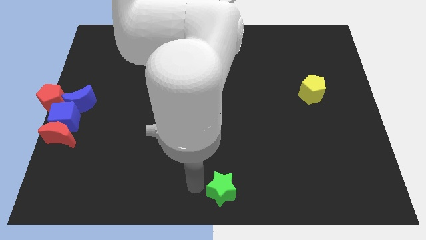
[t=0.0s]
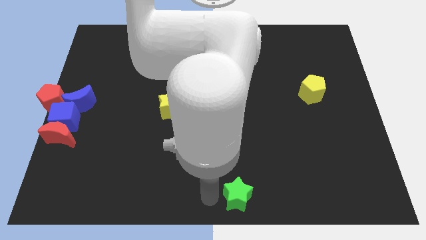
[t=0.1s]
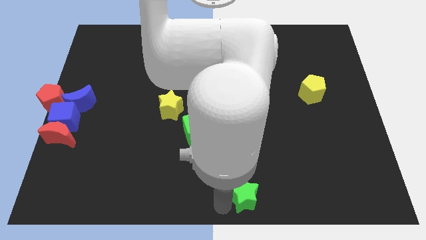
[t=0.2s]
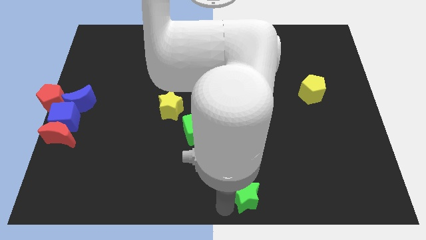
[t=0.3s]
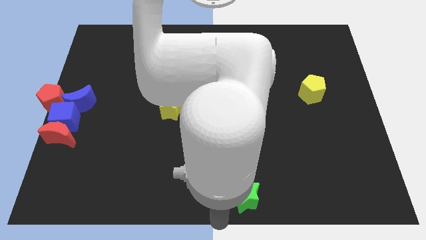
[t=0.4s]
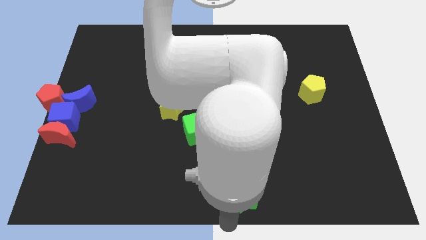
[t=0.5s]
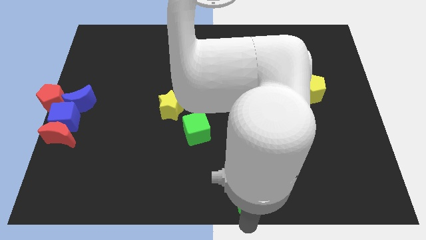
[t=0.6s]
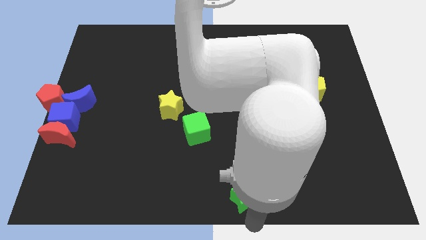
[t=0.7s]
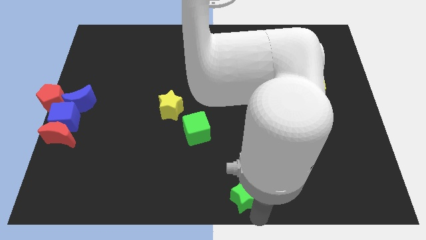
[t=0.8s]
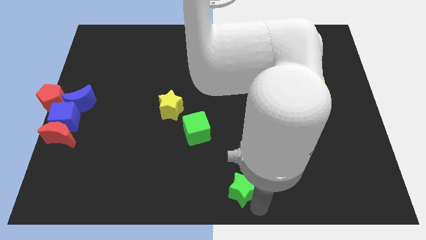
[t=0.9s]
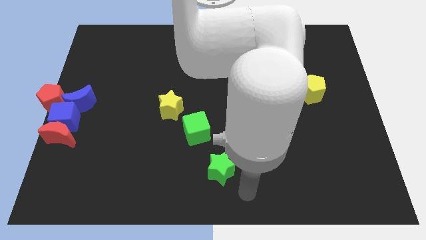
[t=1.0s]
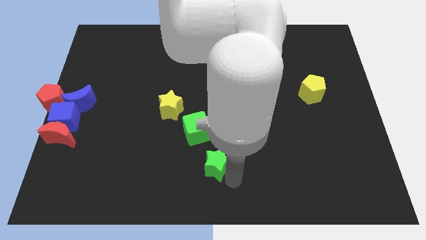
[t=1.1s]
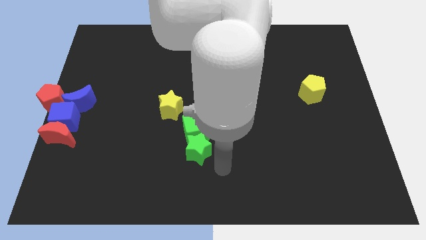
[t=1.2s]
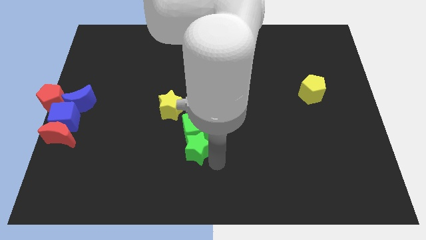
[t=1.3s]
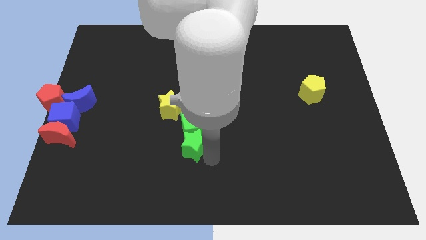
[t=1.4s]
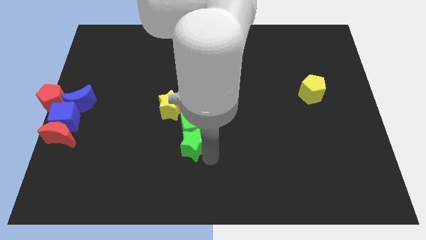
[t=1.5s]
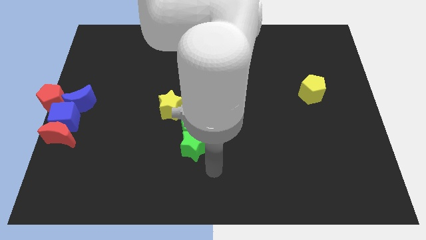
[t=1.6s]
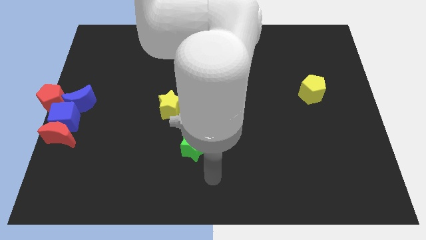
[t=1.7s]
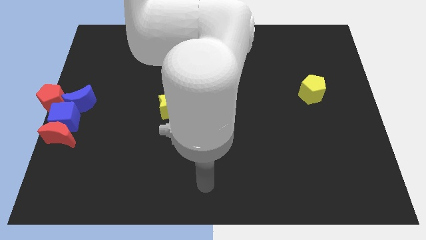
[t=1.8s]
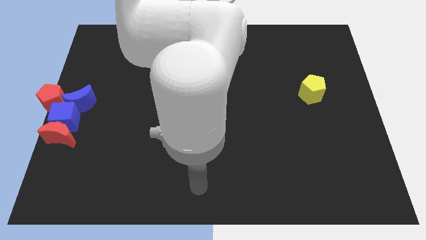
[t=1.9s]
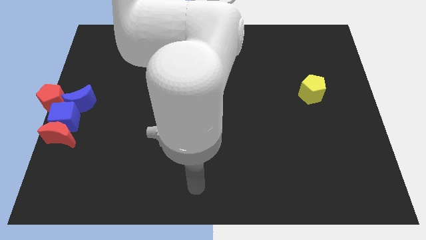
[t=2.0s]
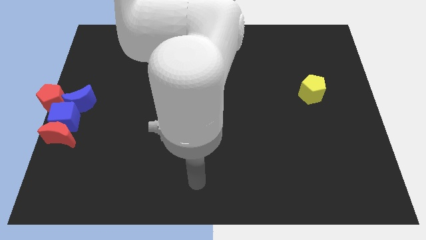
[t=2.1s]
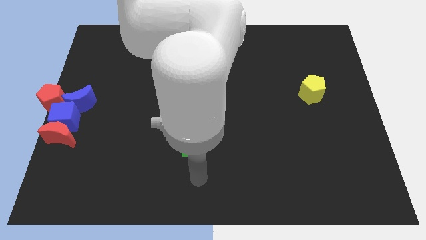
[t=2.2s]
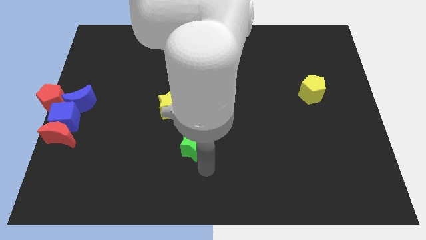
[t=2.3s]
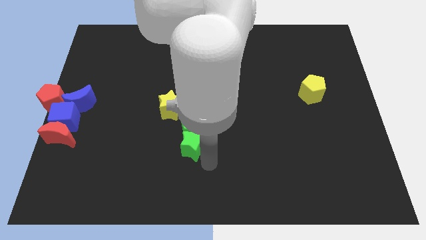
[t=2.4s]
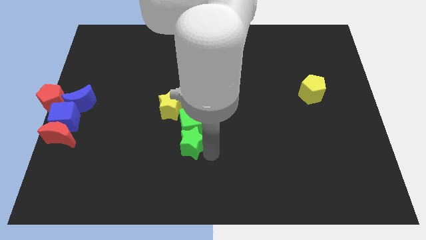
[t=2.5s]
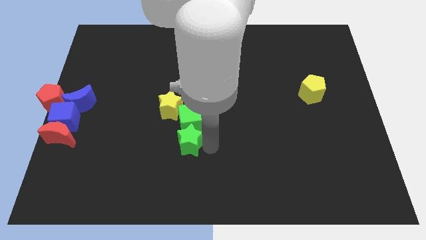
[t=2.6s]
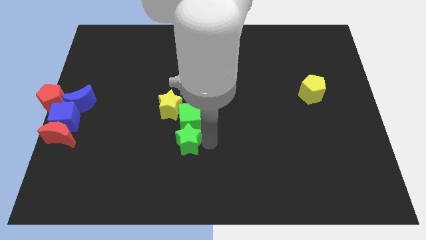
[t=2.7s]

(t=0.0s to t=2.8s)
push the green star into the green cube

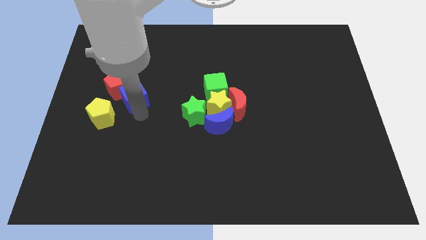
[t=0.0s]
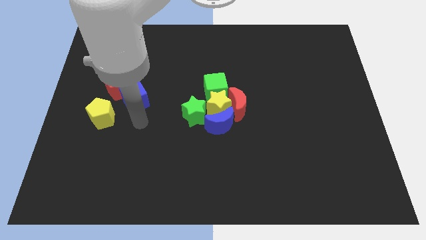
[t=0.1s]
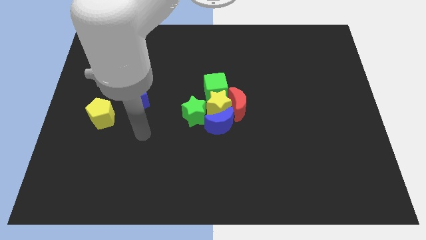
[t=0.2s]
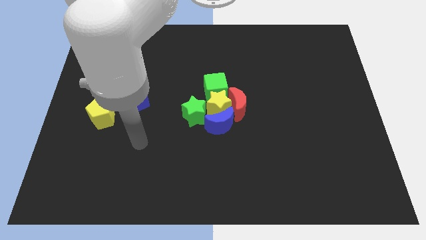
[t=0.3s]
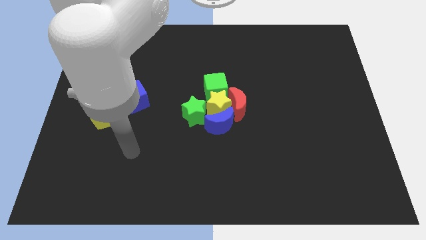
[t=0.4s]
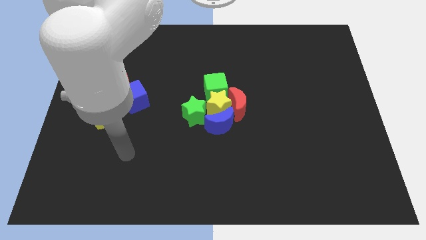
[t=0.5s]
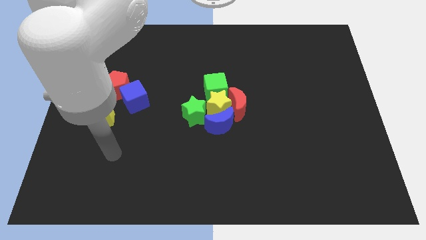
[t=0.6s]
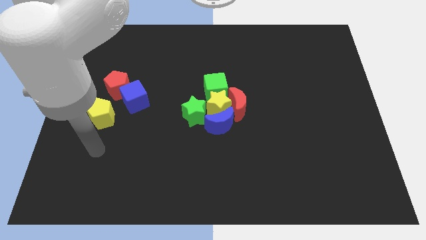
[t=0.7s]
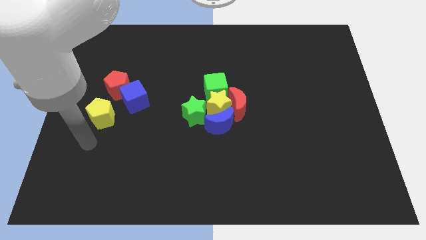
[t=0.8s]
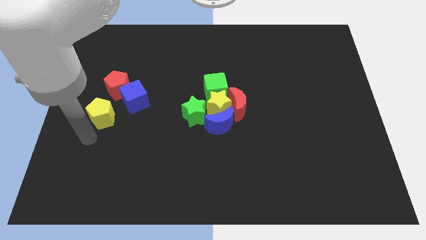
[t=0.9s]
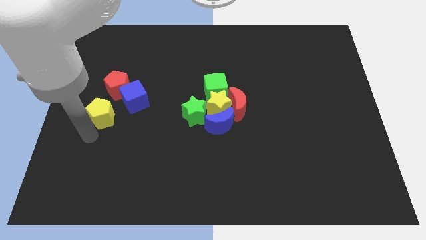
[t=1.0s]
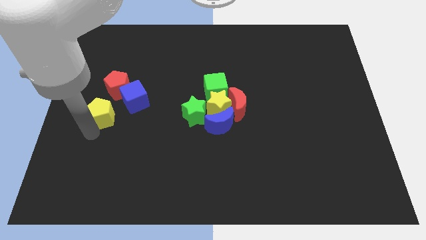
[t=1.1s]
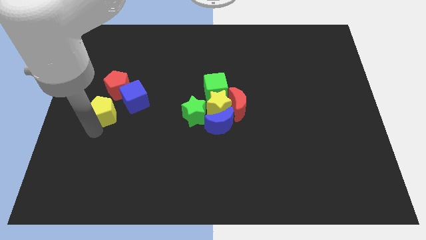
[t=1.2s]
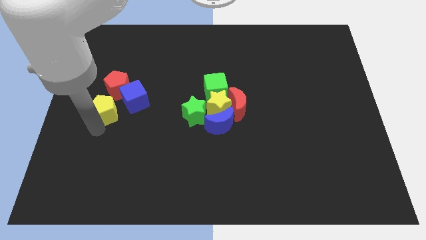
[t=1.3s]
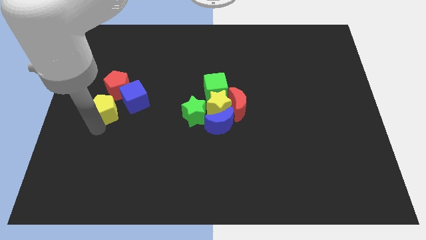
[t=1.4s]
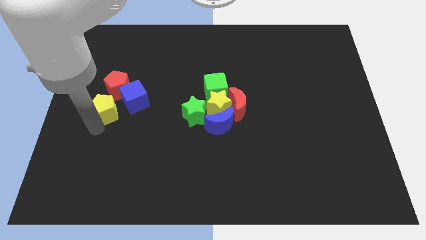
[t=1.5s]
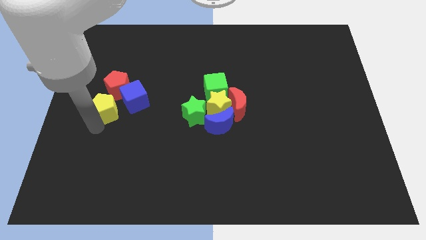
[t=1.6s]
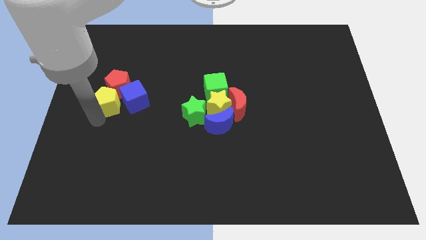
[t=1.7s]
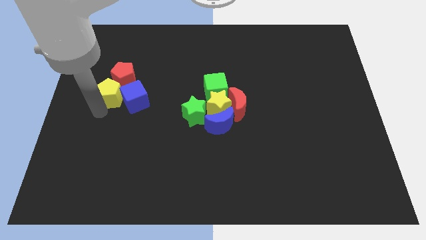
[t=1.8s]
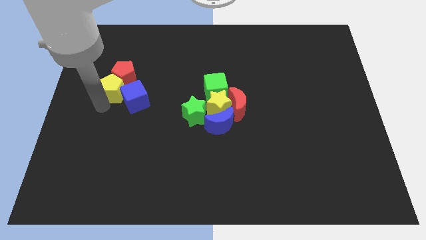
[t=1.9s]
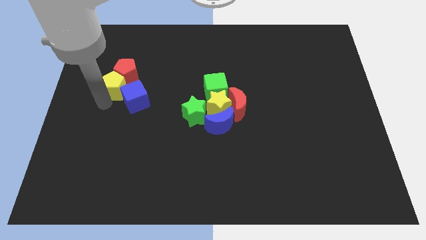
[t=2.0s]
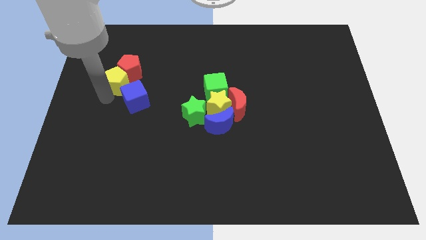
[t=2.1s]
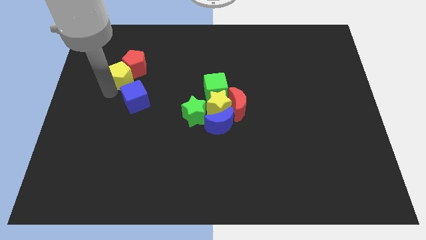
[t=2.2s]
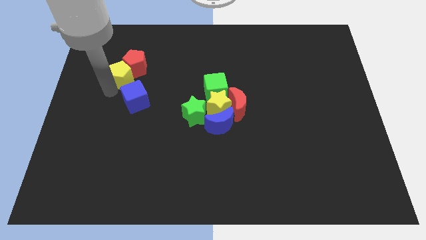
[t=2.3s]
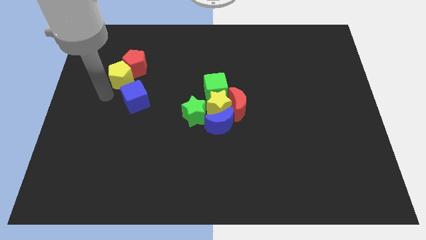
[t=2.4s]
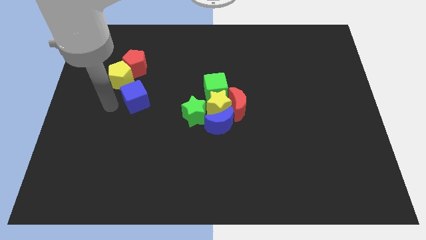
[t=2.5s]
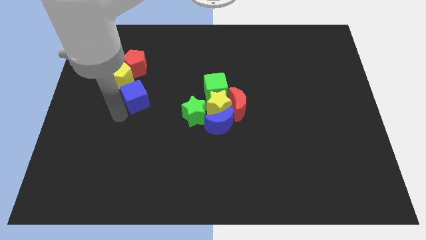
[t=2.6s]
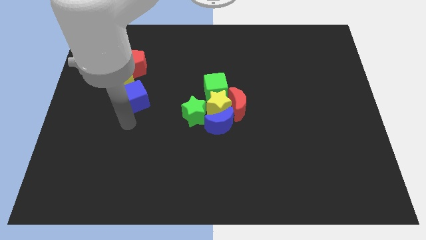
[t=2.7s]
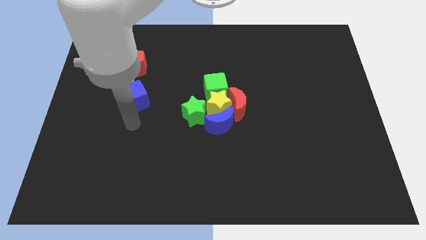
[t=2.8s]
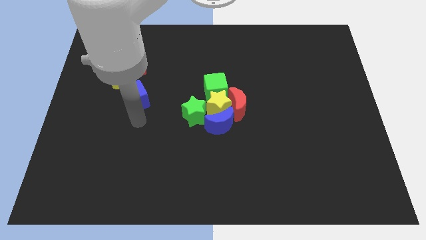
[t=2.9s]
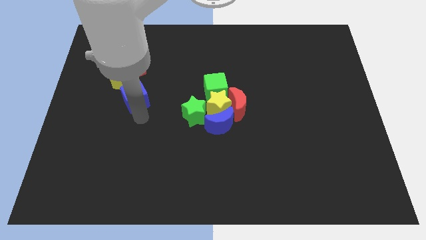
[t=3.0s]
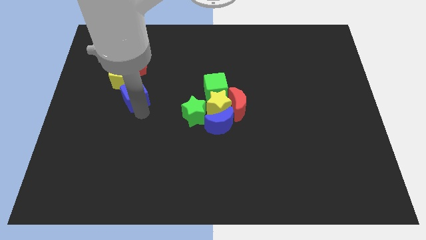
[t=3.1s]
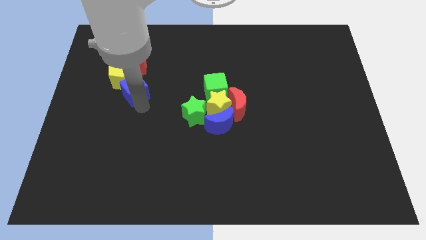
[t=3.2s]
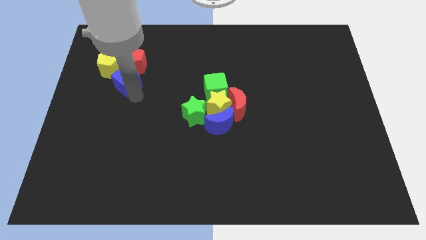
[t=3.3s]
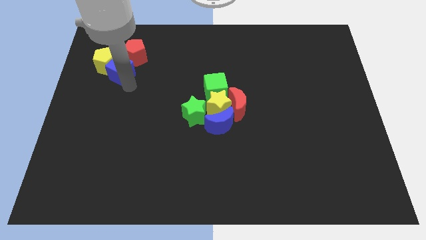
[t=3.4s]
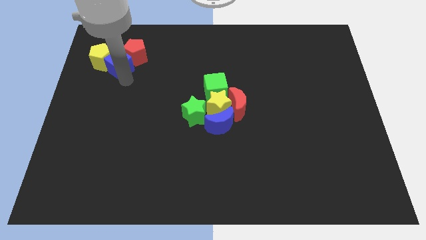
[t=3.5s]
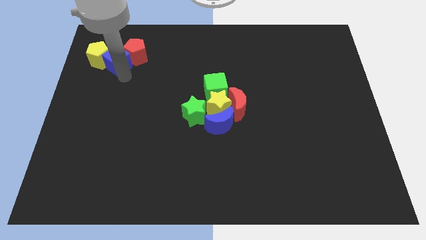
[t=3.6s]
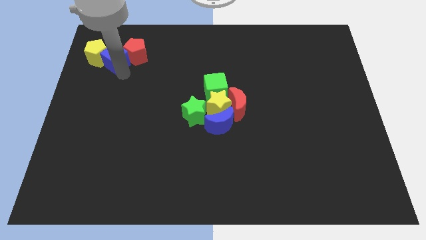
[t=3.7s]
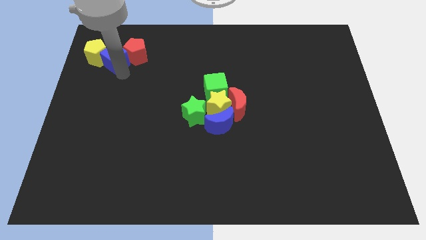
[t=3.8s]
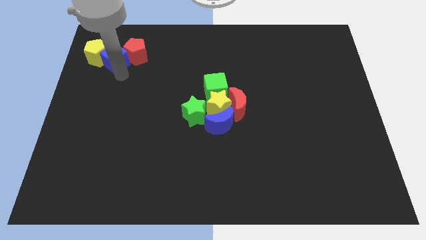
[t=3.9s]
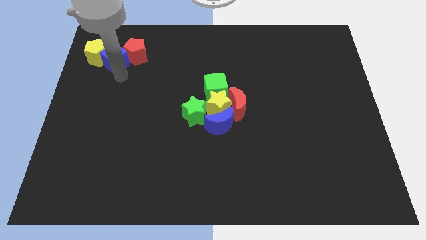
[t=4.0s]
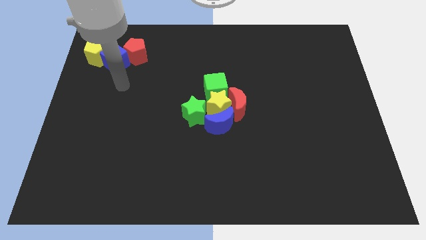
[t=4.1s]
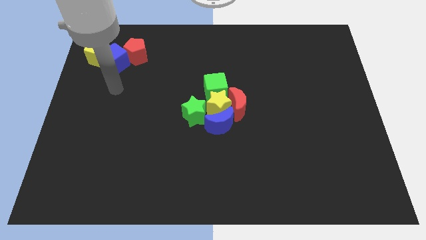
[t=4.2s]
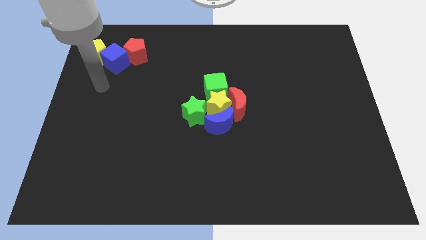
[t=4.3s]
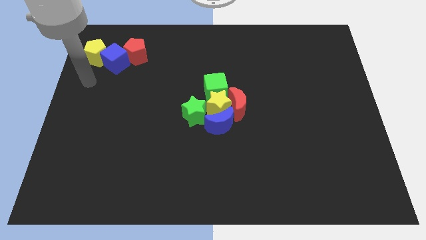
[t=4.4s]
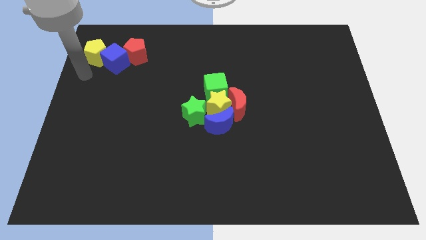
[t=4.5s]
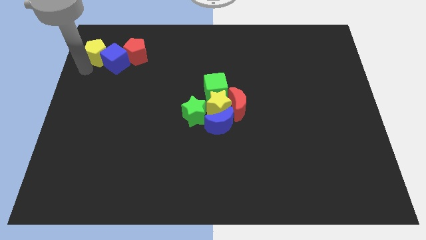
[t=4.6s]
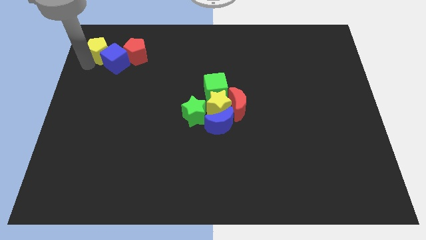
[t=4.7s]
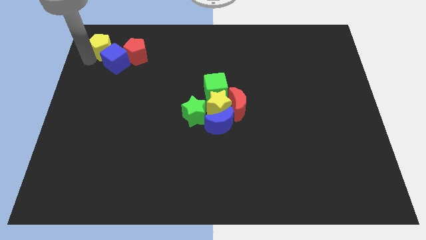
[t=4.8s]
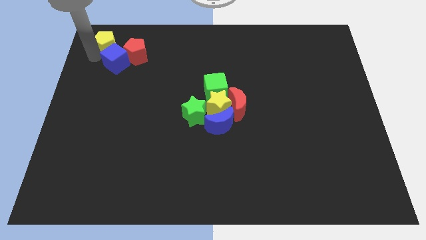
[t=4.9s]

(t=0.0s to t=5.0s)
push the yellow pentagon slightly upwards

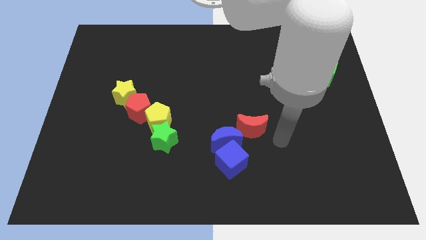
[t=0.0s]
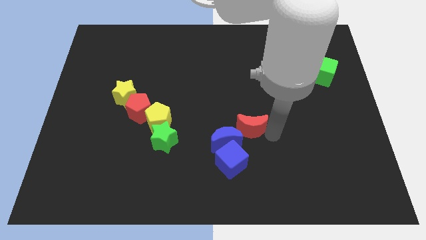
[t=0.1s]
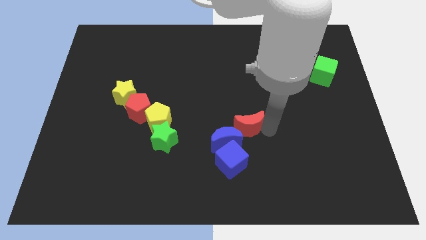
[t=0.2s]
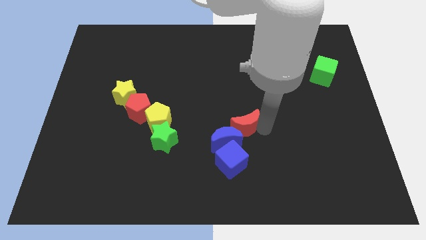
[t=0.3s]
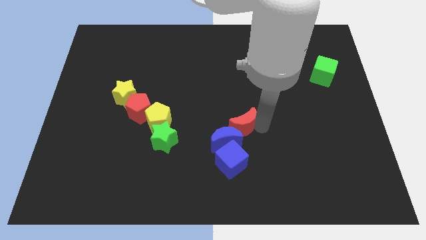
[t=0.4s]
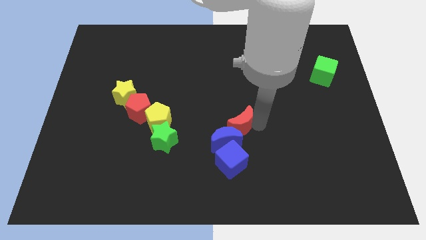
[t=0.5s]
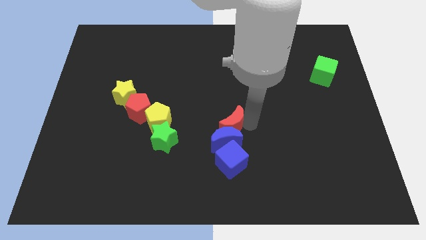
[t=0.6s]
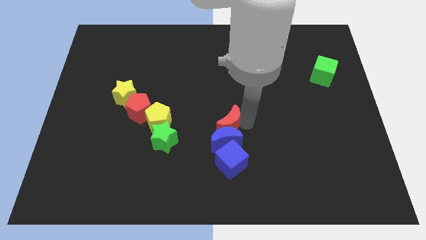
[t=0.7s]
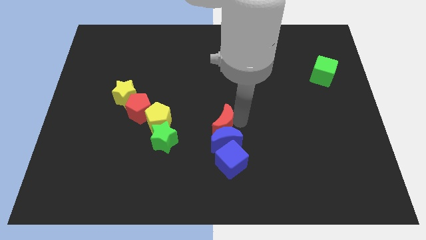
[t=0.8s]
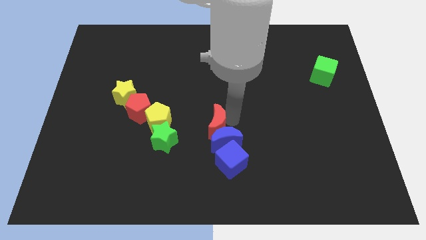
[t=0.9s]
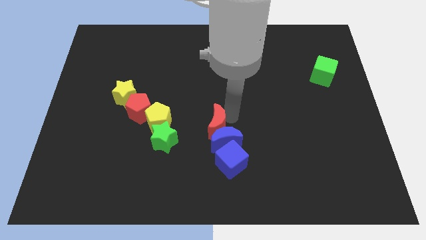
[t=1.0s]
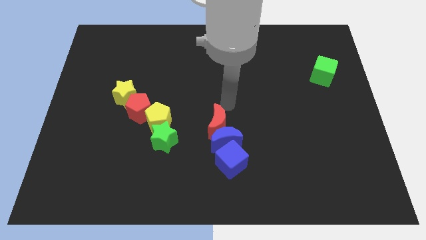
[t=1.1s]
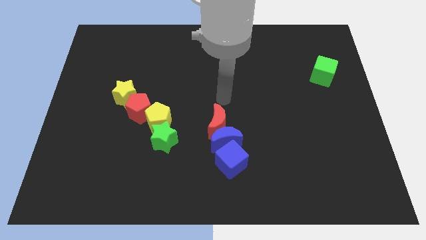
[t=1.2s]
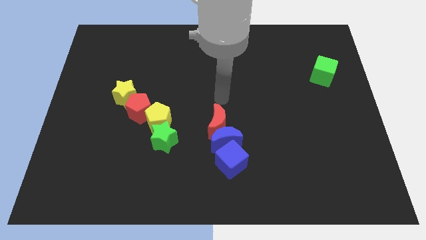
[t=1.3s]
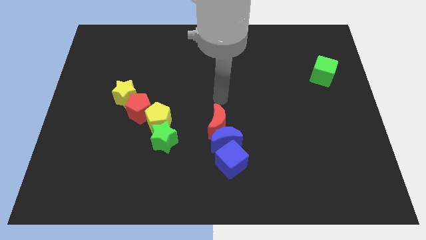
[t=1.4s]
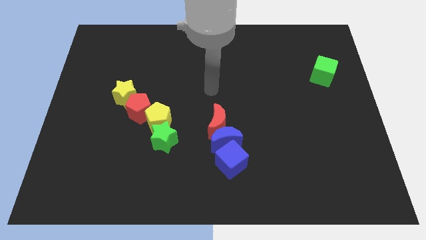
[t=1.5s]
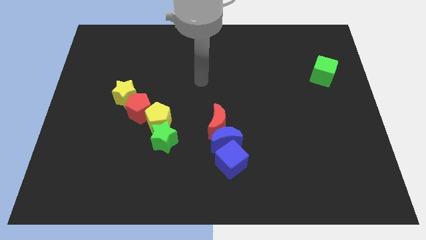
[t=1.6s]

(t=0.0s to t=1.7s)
slide the red moon to the top left side of the blue moon
